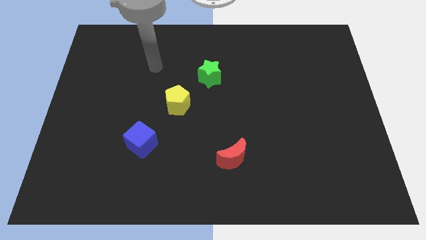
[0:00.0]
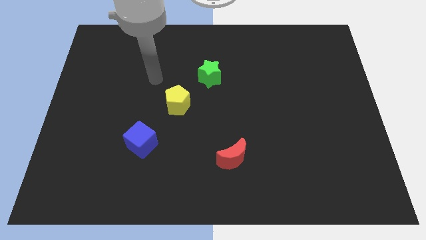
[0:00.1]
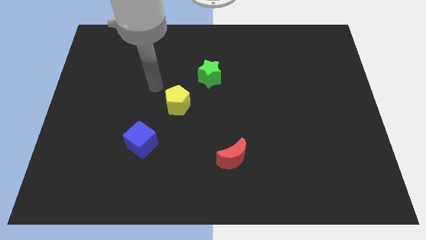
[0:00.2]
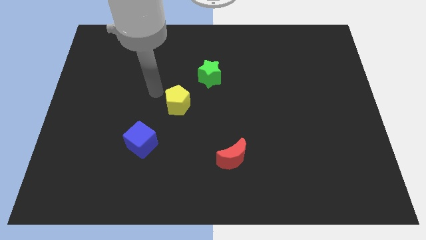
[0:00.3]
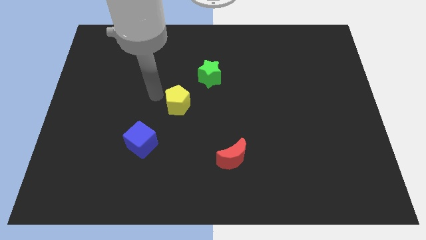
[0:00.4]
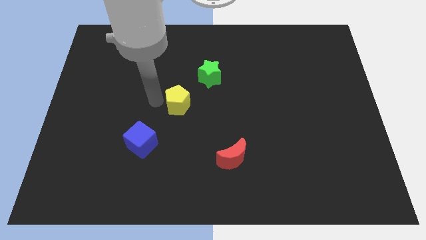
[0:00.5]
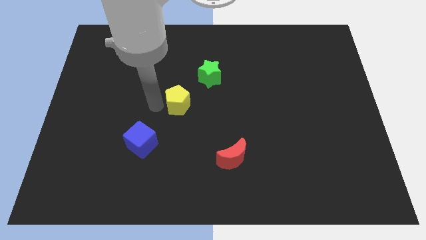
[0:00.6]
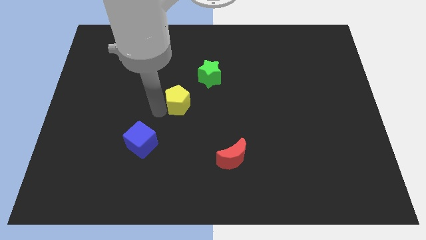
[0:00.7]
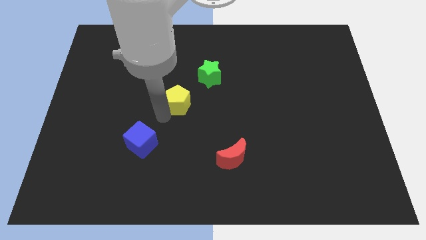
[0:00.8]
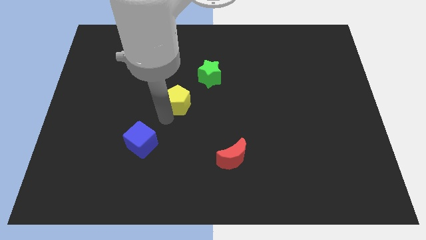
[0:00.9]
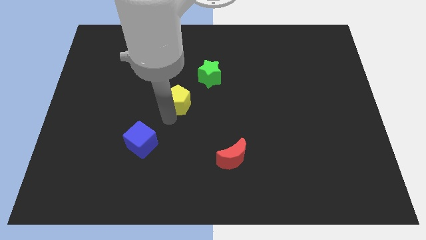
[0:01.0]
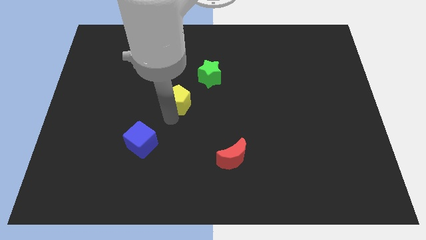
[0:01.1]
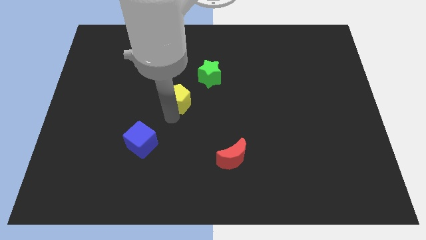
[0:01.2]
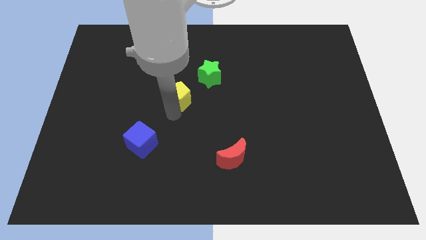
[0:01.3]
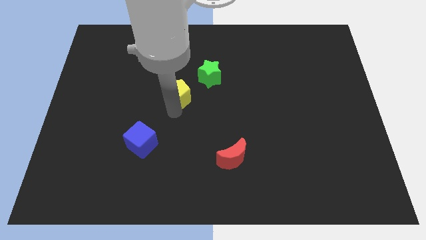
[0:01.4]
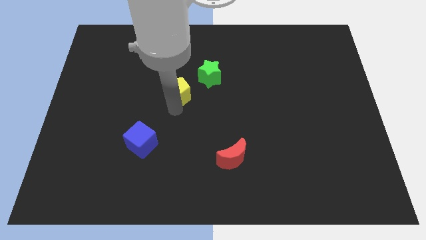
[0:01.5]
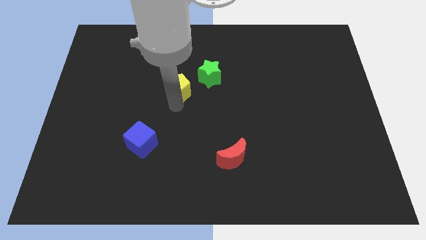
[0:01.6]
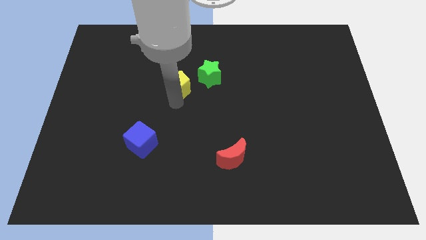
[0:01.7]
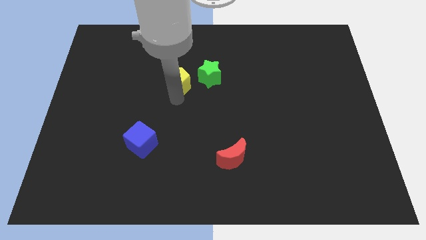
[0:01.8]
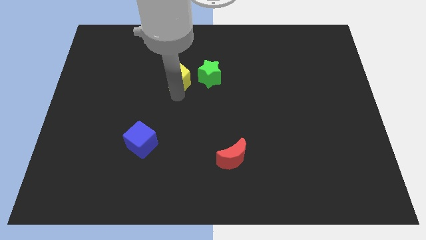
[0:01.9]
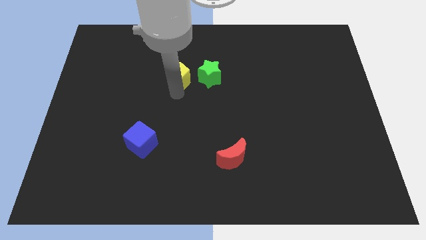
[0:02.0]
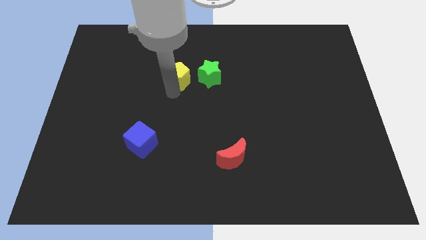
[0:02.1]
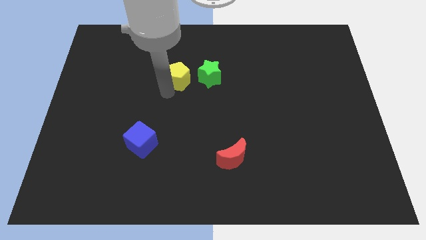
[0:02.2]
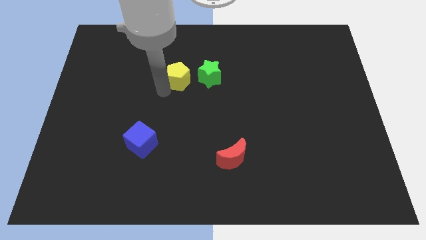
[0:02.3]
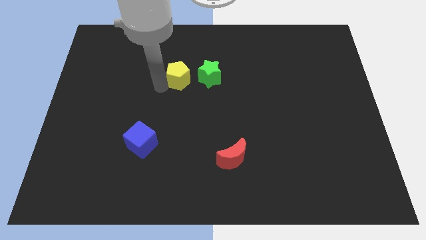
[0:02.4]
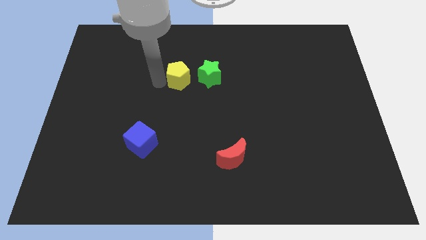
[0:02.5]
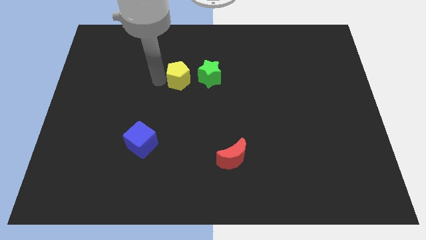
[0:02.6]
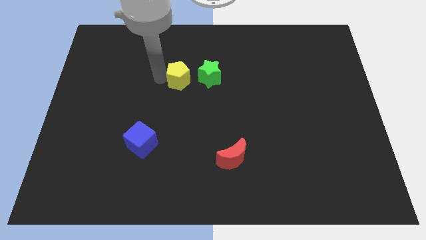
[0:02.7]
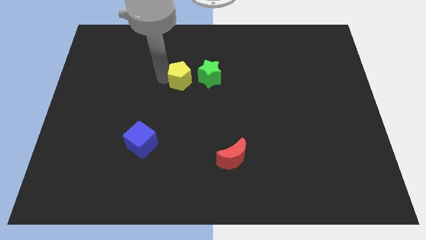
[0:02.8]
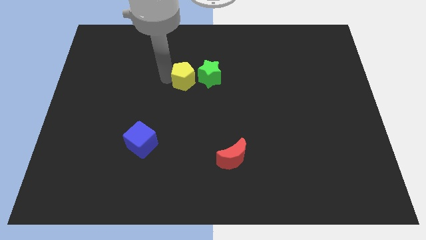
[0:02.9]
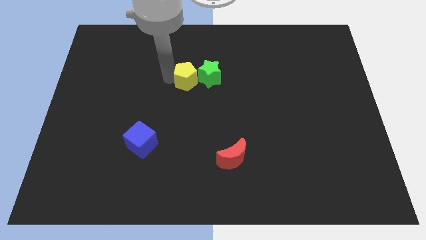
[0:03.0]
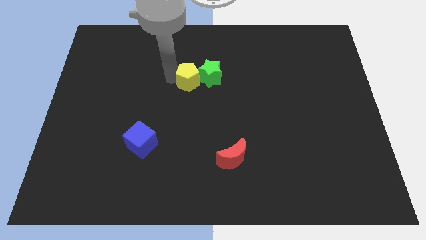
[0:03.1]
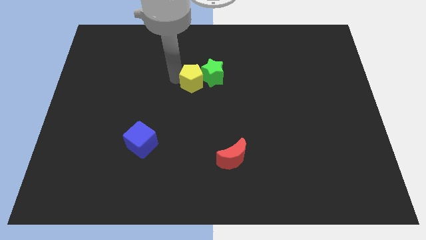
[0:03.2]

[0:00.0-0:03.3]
push the yellow pentagon to the green star

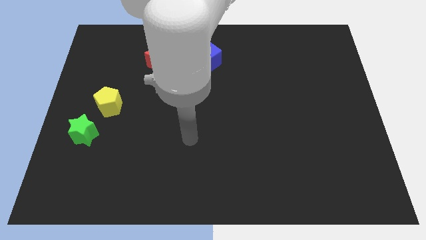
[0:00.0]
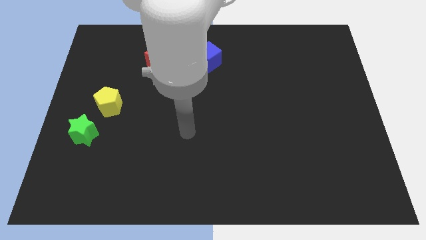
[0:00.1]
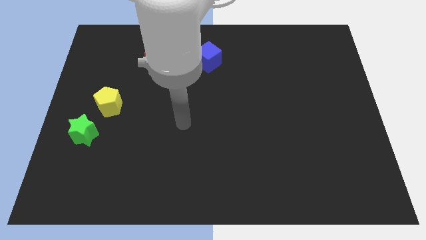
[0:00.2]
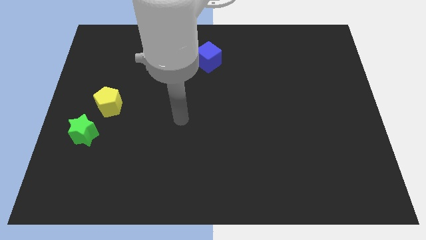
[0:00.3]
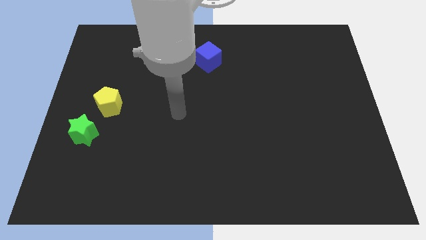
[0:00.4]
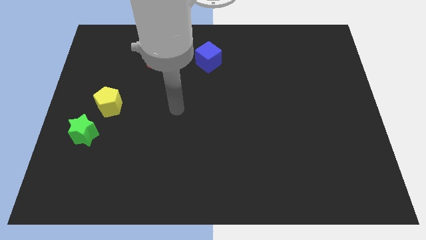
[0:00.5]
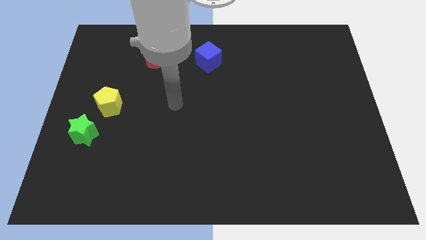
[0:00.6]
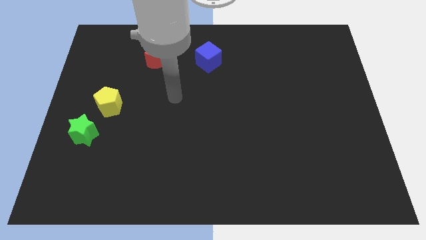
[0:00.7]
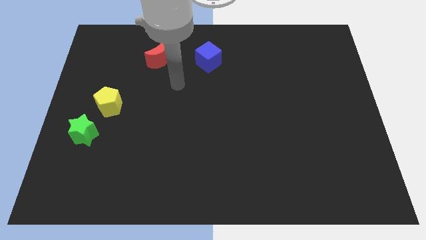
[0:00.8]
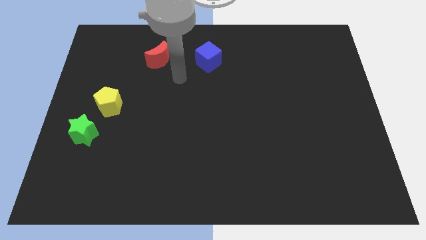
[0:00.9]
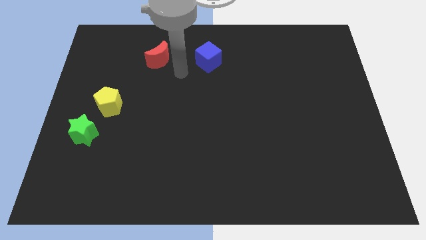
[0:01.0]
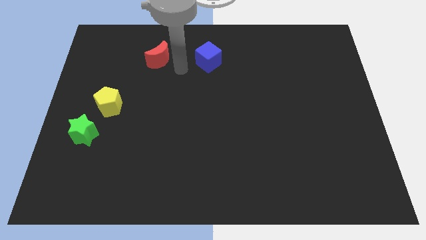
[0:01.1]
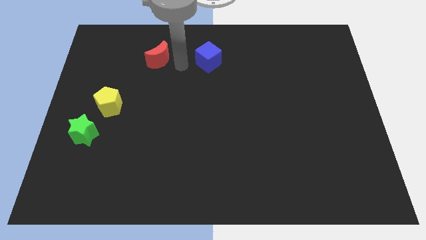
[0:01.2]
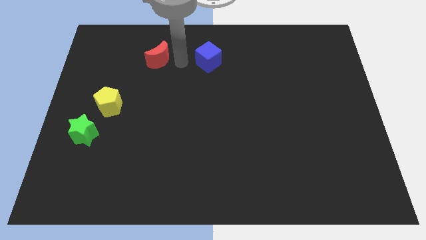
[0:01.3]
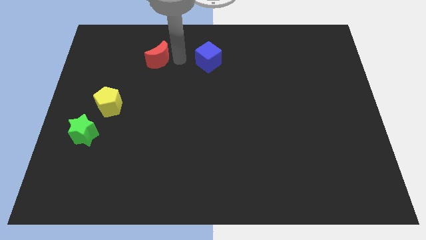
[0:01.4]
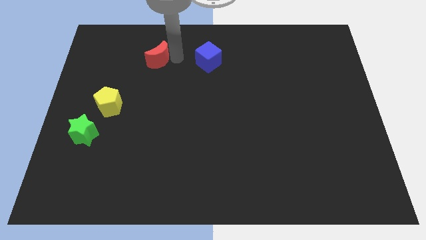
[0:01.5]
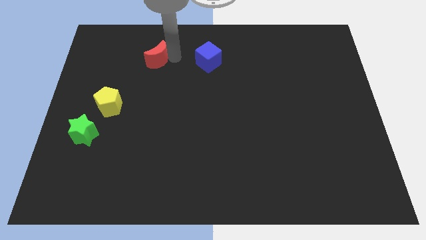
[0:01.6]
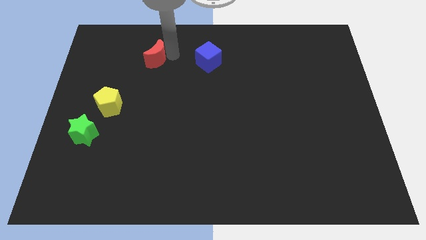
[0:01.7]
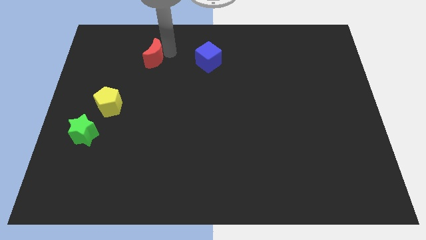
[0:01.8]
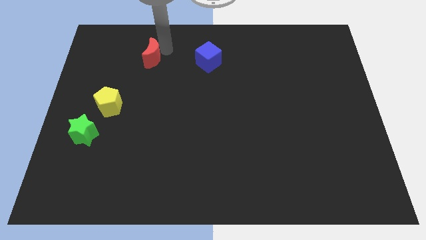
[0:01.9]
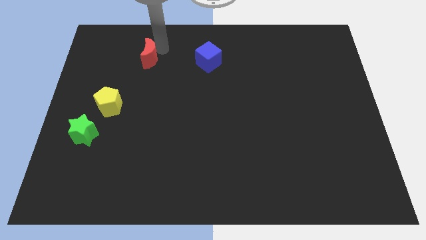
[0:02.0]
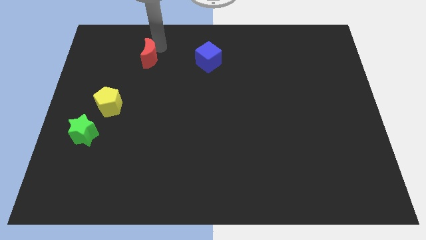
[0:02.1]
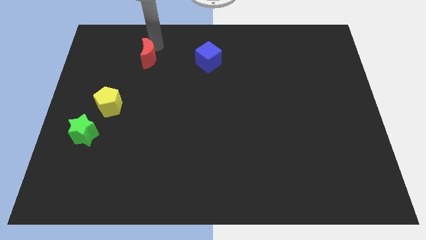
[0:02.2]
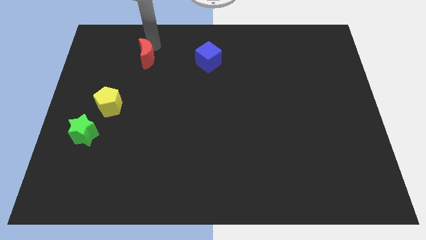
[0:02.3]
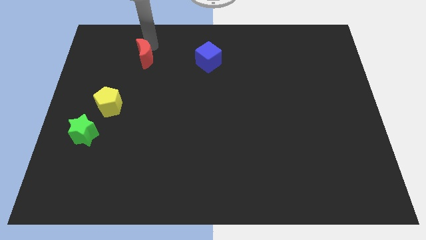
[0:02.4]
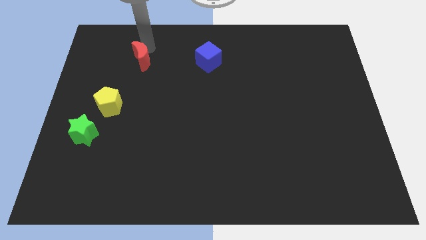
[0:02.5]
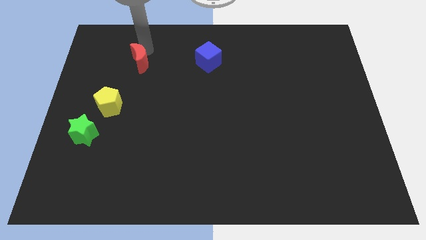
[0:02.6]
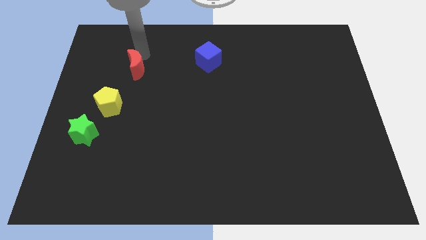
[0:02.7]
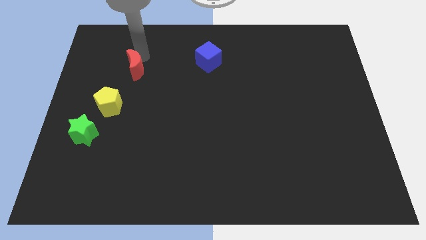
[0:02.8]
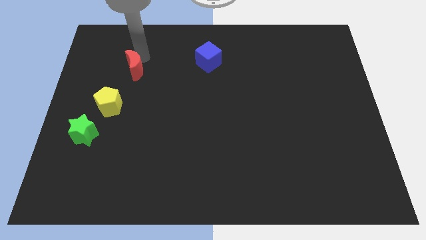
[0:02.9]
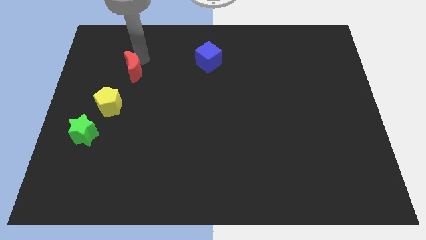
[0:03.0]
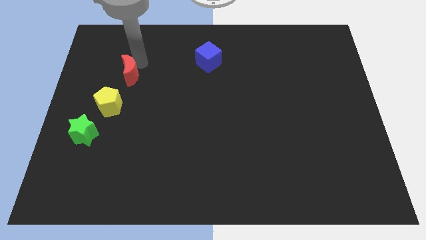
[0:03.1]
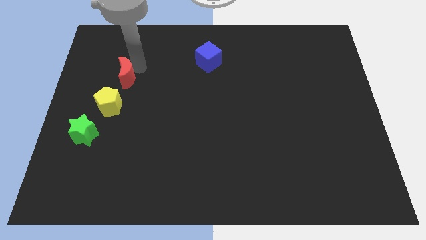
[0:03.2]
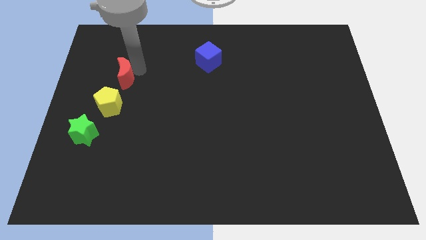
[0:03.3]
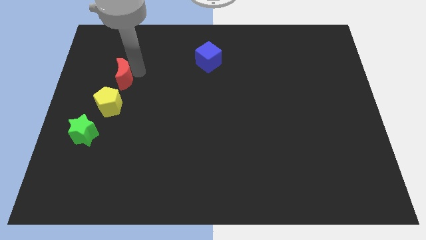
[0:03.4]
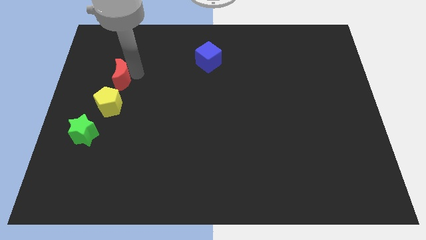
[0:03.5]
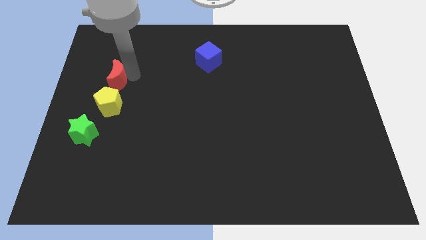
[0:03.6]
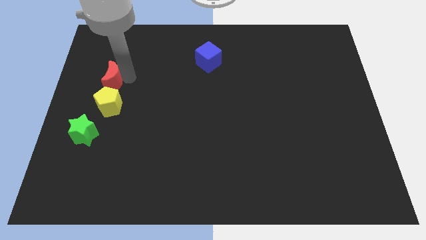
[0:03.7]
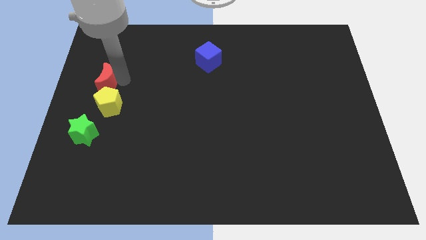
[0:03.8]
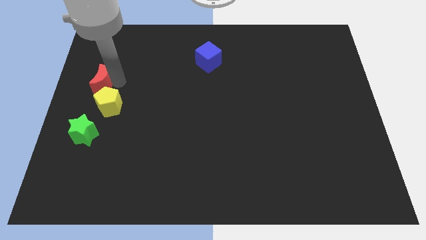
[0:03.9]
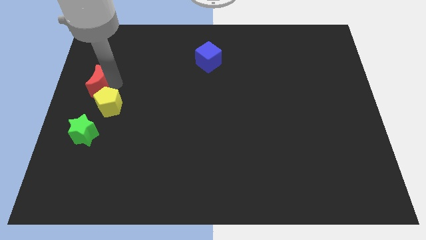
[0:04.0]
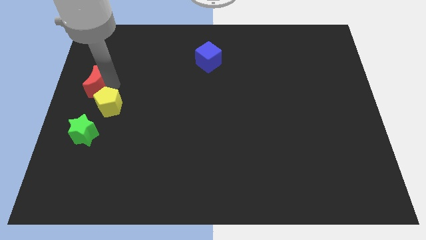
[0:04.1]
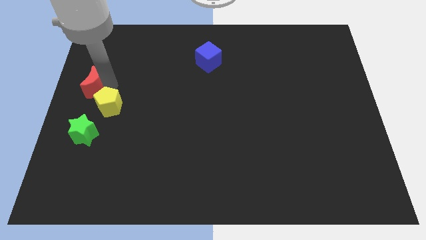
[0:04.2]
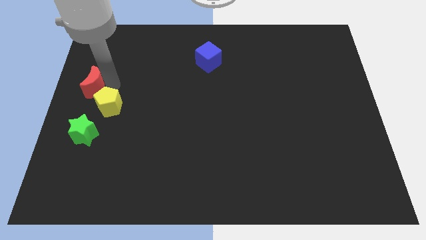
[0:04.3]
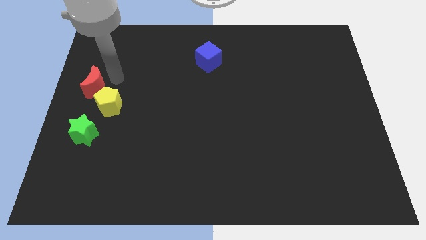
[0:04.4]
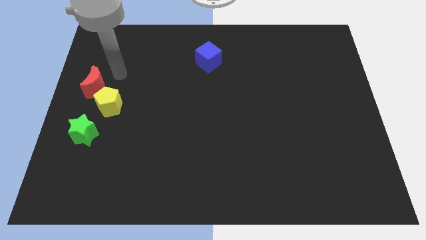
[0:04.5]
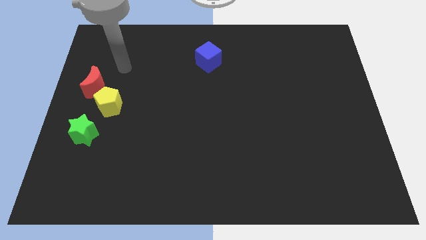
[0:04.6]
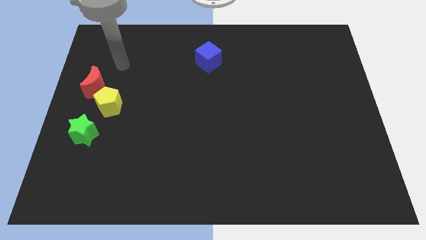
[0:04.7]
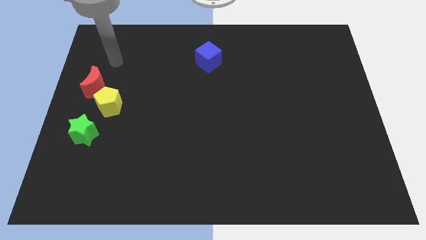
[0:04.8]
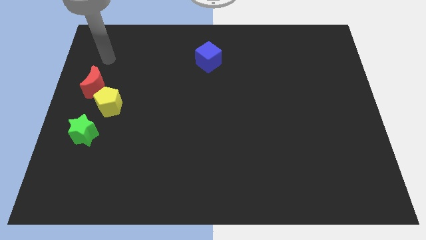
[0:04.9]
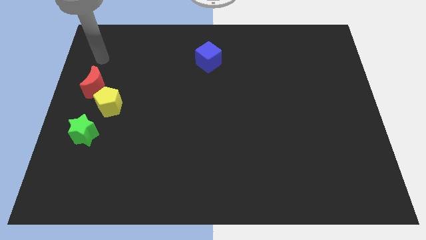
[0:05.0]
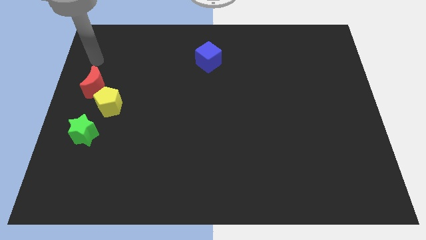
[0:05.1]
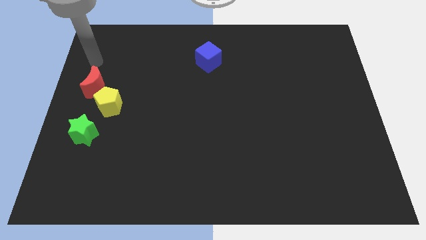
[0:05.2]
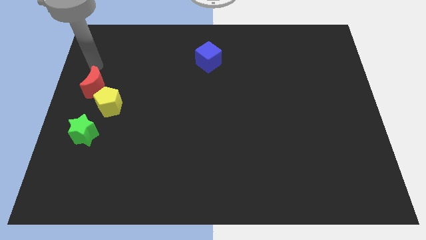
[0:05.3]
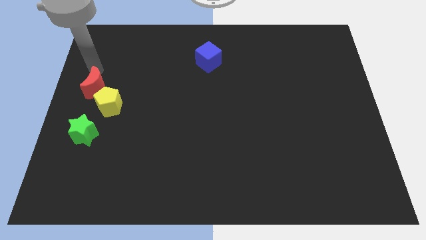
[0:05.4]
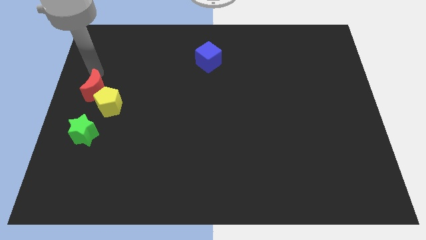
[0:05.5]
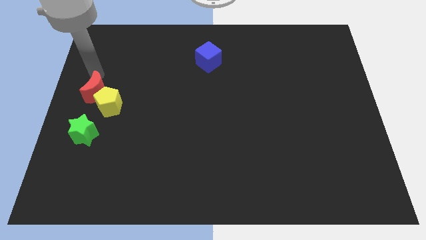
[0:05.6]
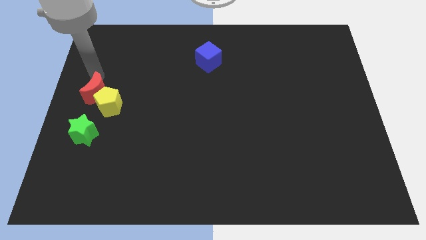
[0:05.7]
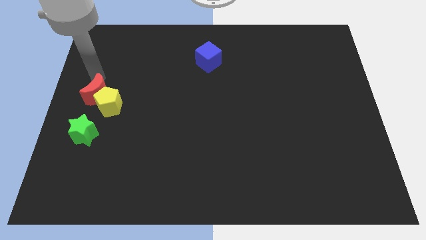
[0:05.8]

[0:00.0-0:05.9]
slide the moon to the pentagon
